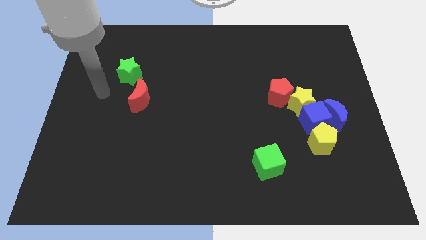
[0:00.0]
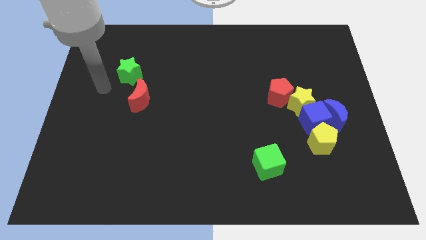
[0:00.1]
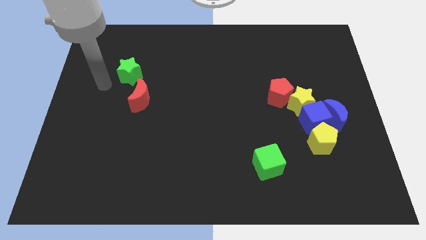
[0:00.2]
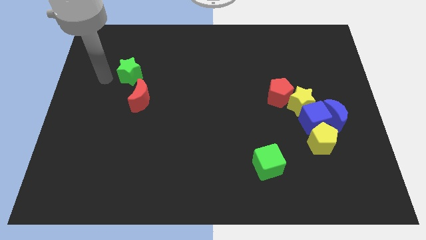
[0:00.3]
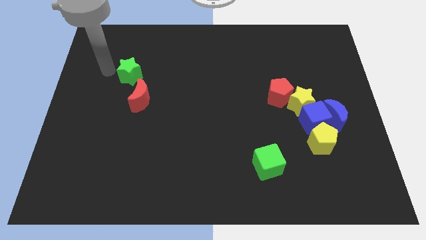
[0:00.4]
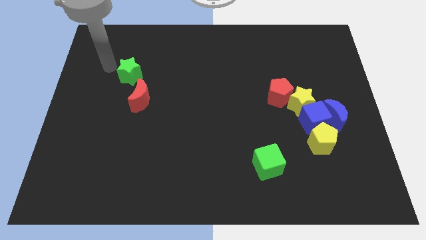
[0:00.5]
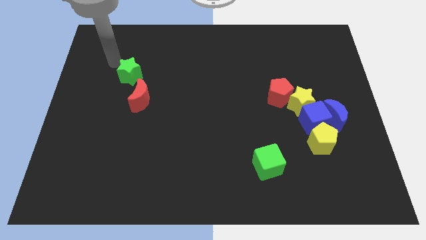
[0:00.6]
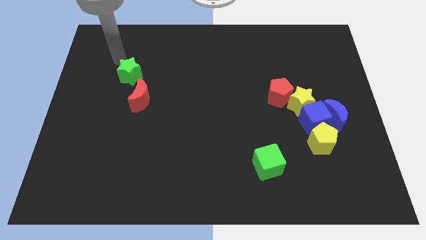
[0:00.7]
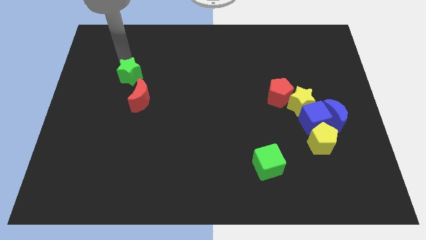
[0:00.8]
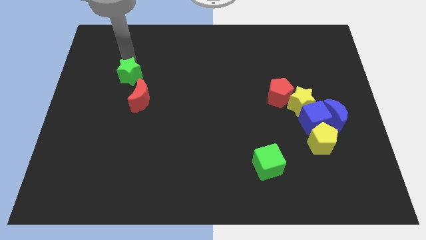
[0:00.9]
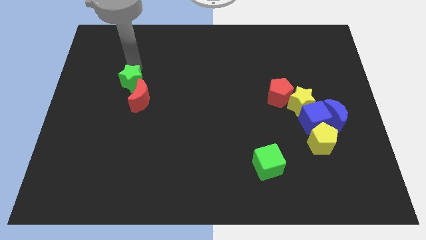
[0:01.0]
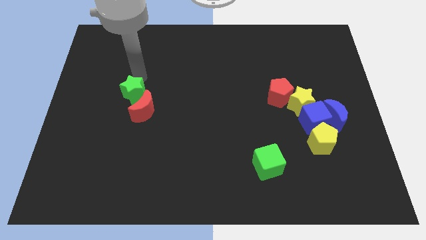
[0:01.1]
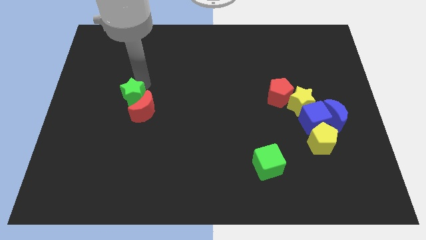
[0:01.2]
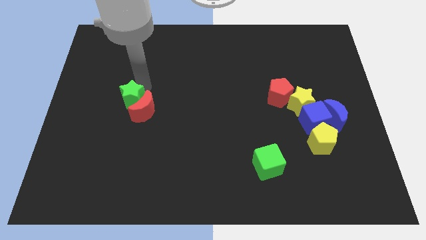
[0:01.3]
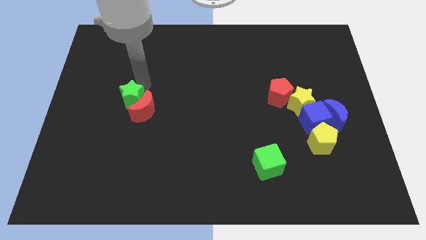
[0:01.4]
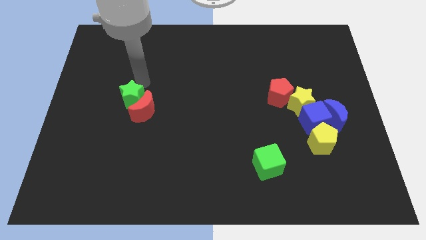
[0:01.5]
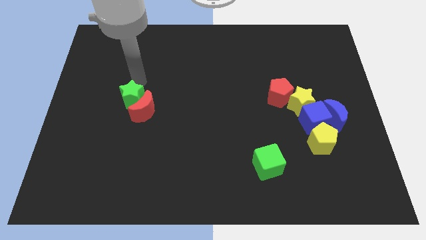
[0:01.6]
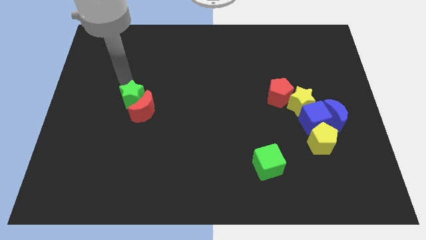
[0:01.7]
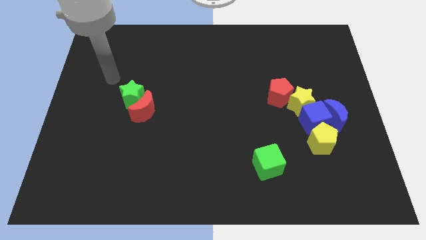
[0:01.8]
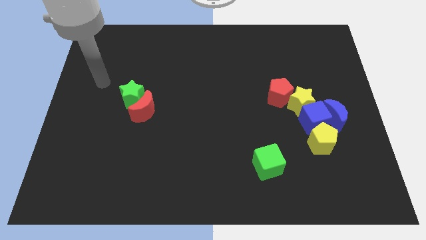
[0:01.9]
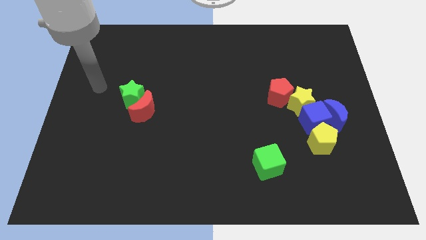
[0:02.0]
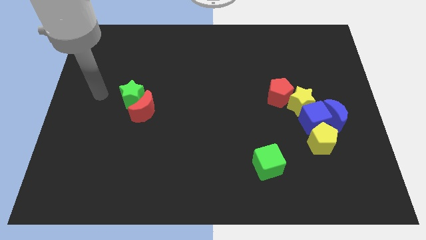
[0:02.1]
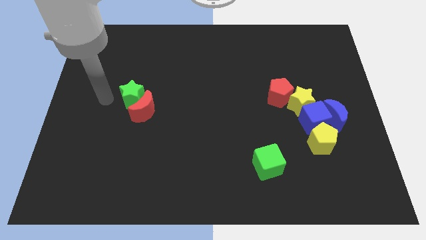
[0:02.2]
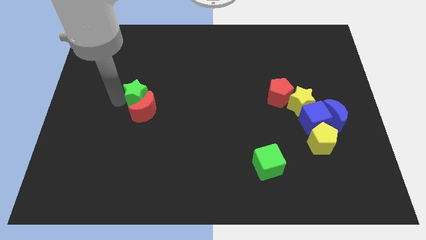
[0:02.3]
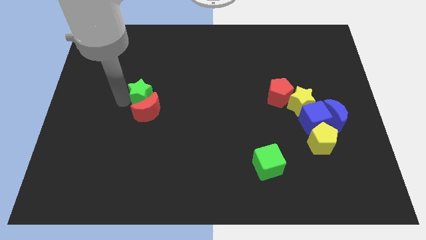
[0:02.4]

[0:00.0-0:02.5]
move the green star into the red crescent

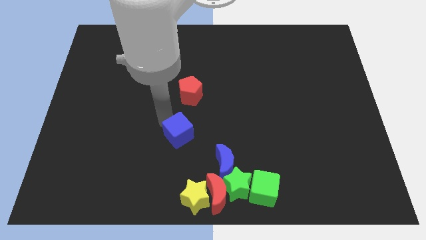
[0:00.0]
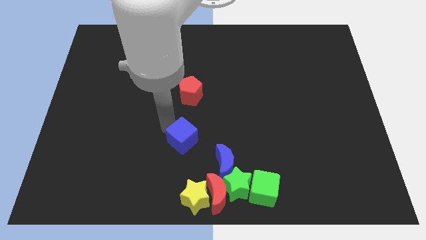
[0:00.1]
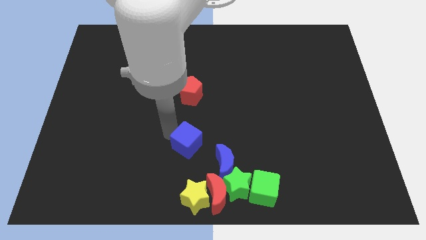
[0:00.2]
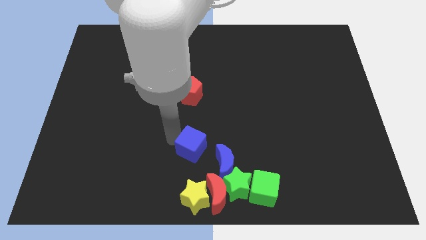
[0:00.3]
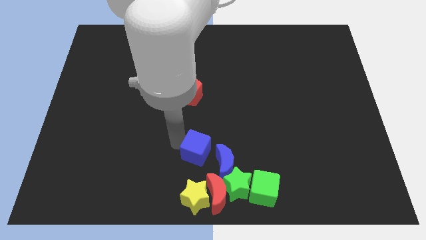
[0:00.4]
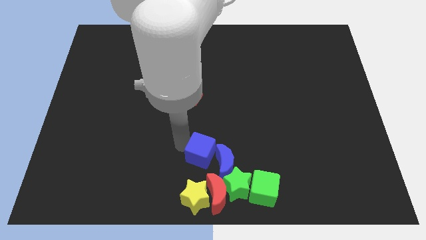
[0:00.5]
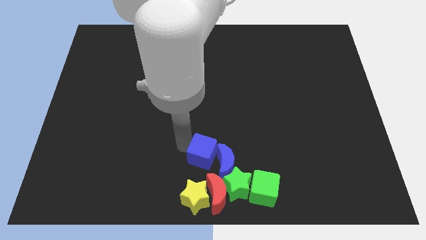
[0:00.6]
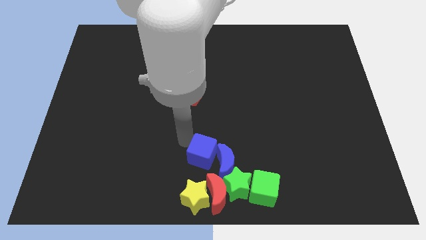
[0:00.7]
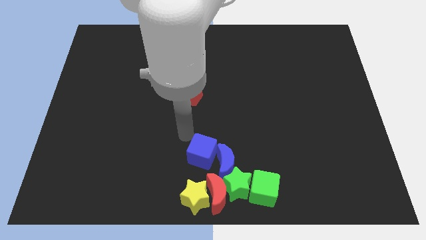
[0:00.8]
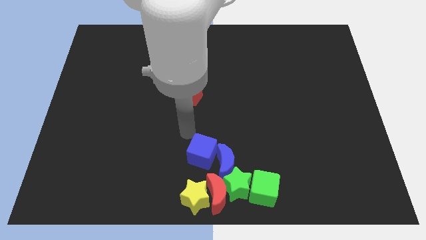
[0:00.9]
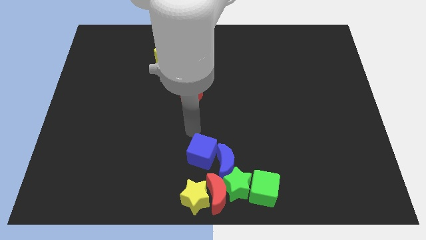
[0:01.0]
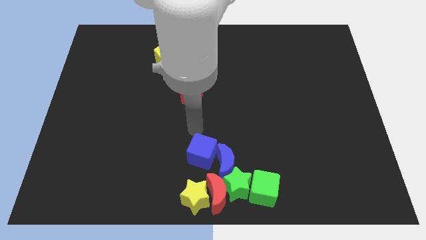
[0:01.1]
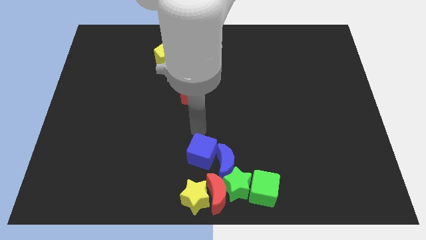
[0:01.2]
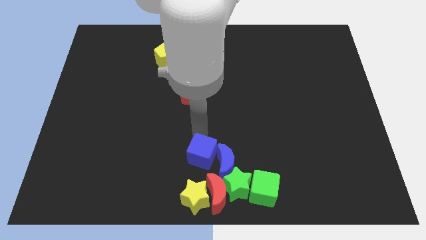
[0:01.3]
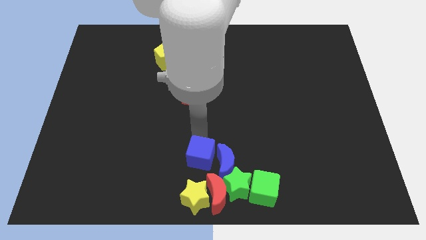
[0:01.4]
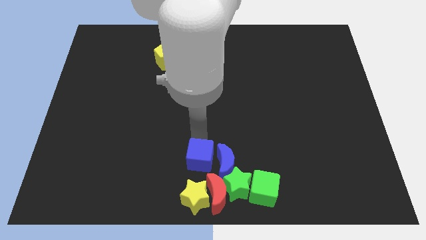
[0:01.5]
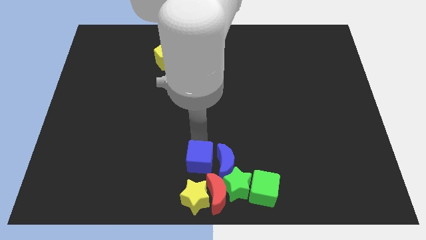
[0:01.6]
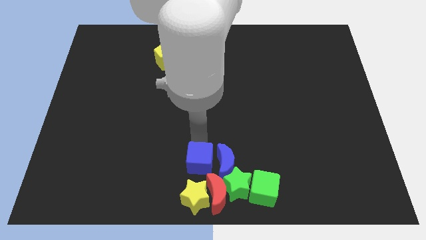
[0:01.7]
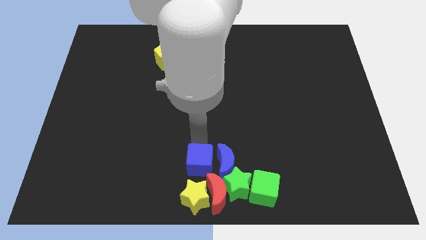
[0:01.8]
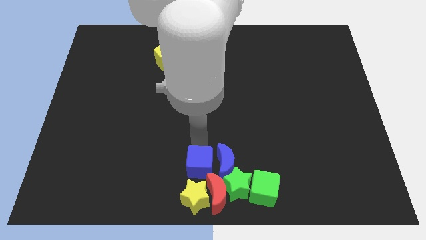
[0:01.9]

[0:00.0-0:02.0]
move the blue cube to the left side of the blue moon

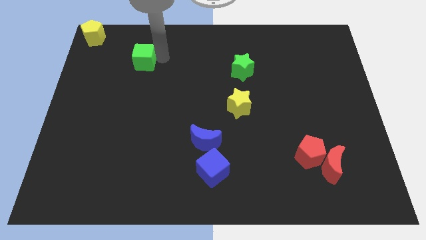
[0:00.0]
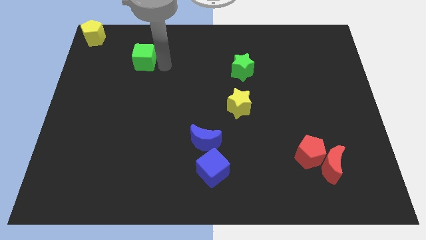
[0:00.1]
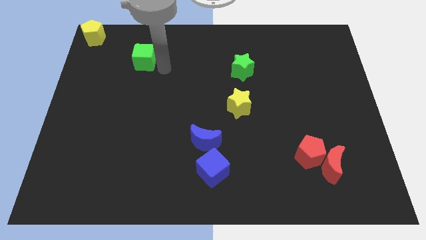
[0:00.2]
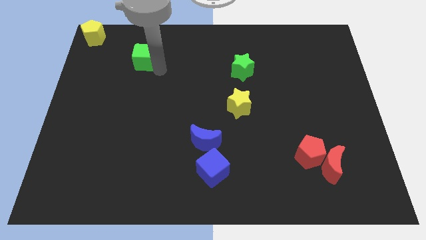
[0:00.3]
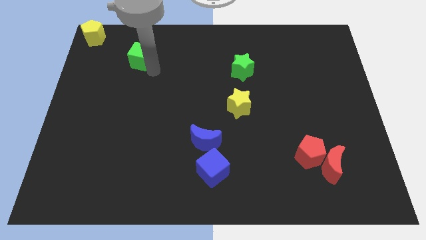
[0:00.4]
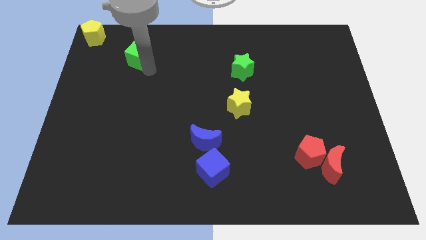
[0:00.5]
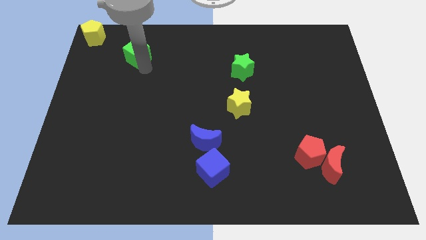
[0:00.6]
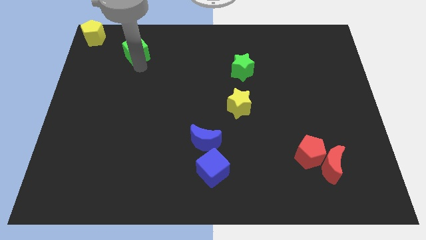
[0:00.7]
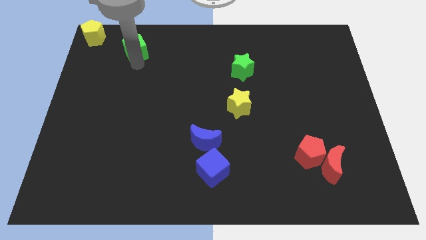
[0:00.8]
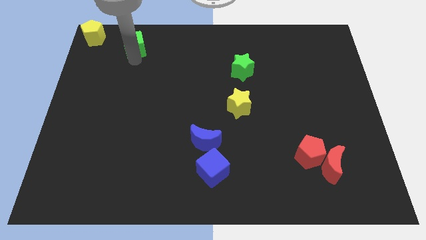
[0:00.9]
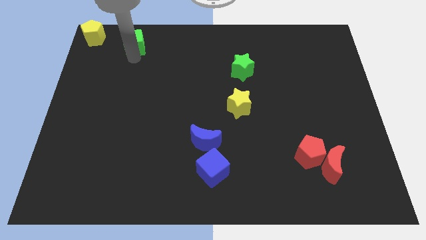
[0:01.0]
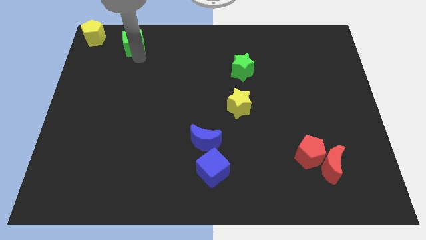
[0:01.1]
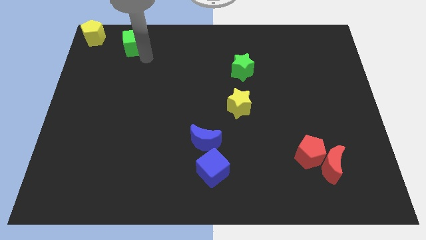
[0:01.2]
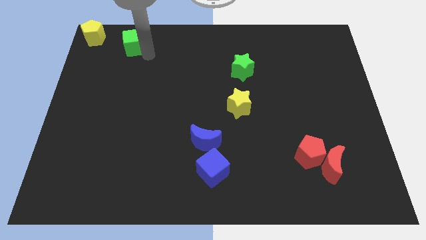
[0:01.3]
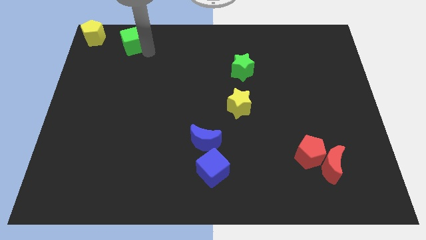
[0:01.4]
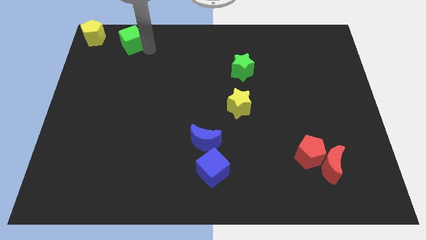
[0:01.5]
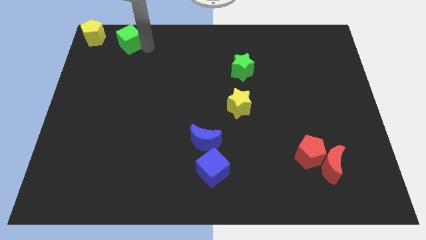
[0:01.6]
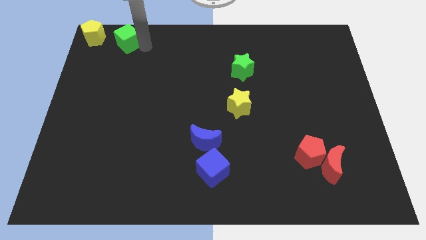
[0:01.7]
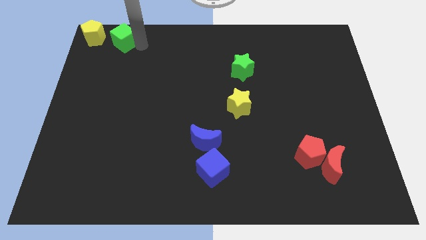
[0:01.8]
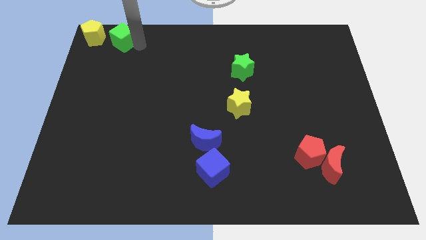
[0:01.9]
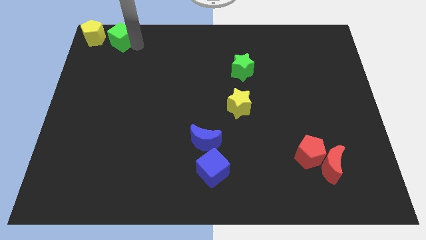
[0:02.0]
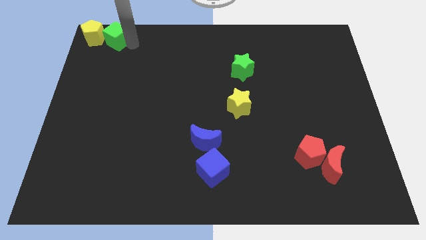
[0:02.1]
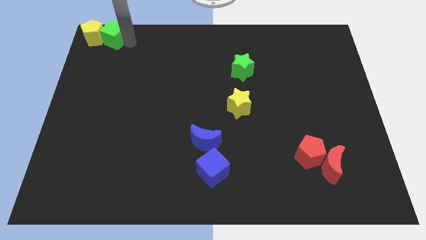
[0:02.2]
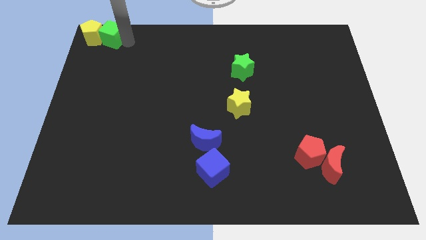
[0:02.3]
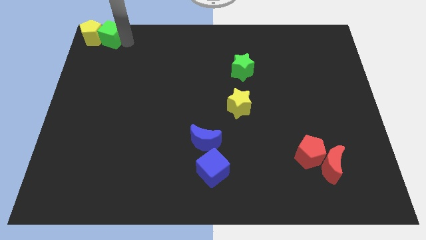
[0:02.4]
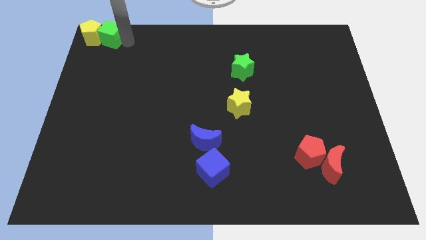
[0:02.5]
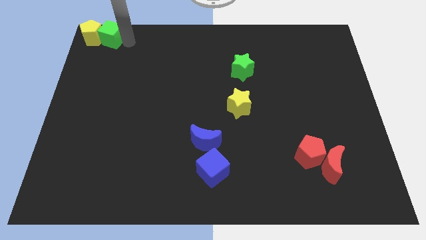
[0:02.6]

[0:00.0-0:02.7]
place the green cube to the right of the yellow pentagon

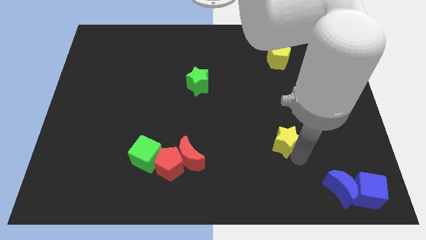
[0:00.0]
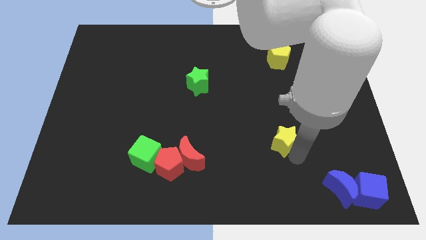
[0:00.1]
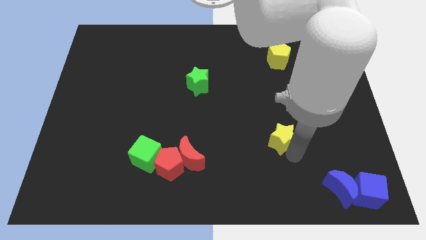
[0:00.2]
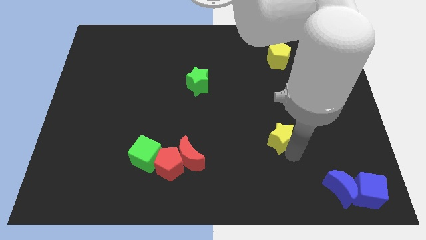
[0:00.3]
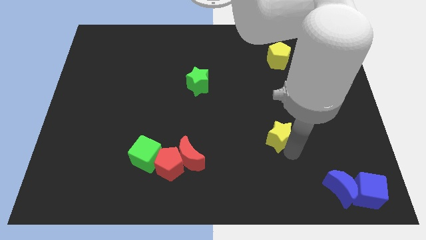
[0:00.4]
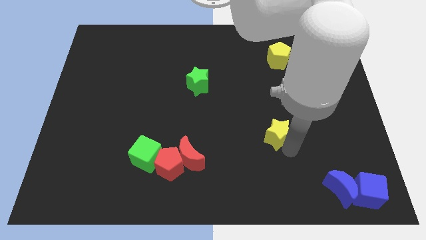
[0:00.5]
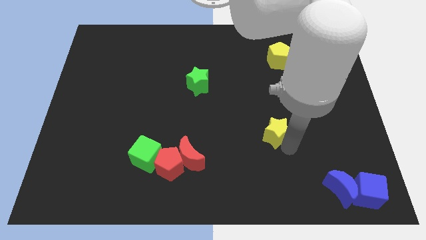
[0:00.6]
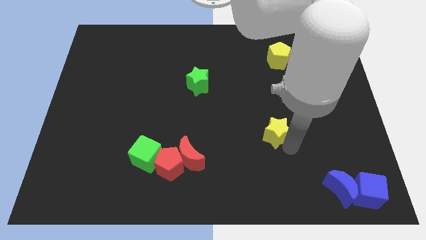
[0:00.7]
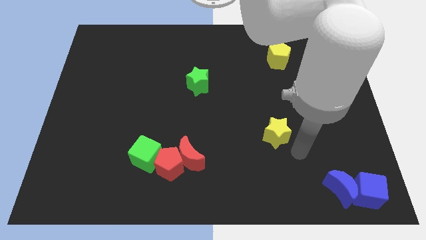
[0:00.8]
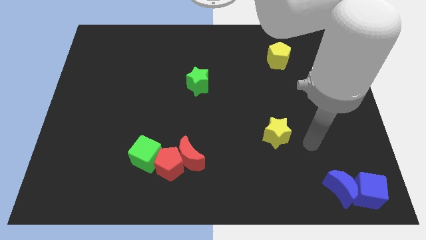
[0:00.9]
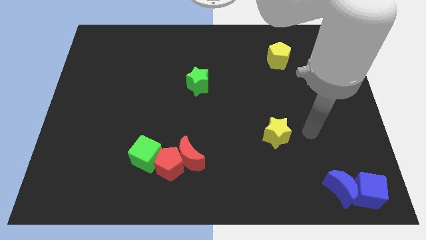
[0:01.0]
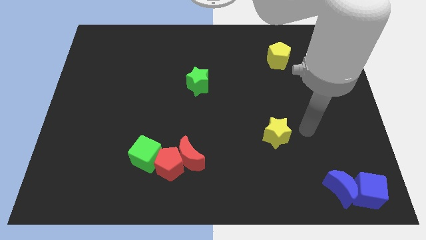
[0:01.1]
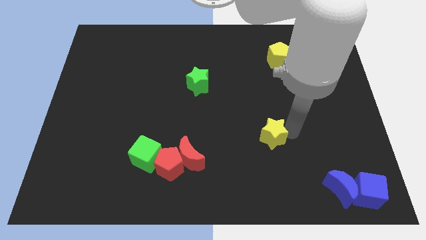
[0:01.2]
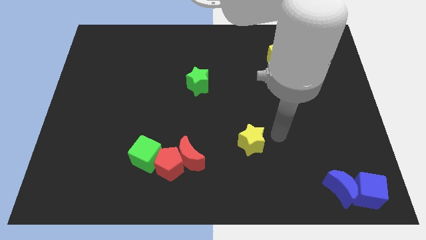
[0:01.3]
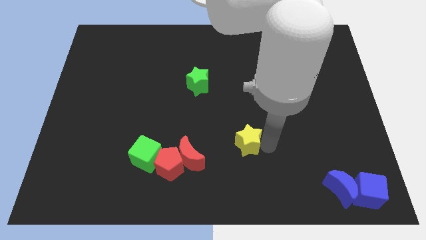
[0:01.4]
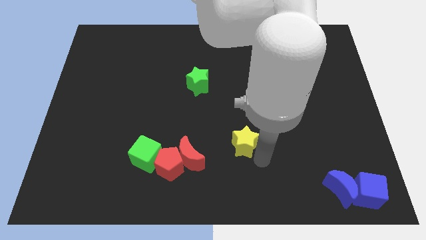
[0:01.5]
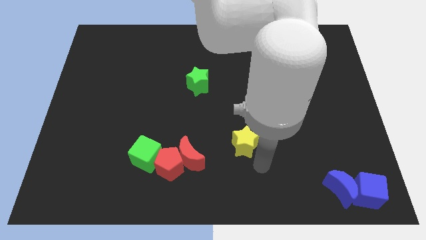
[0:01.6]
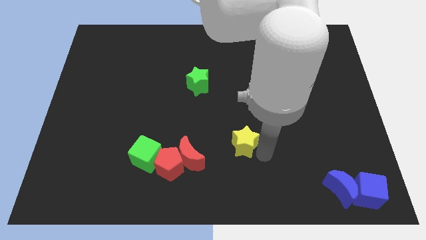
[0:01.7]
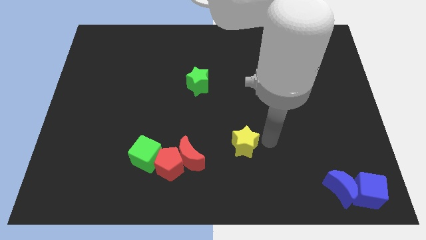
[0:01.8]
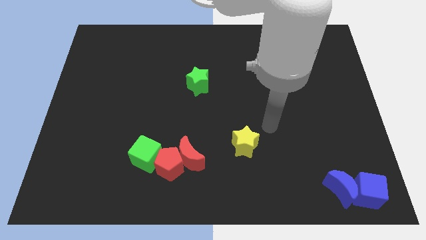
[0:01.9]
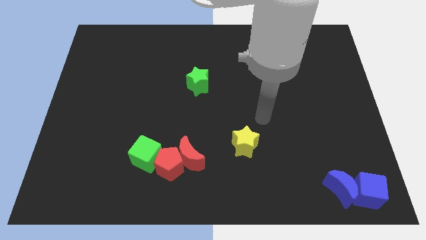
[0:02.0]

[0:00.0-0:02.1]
place the yellow star below the green star
